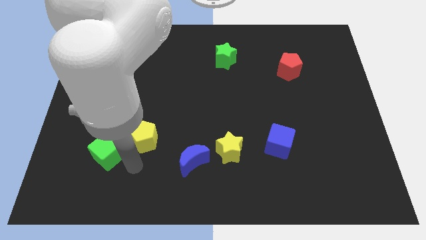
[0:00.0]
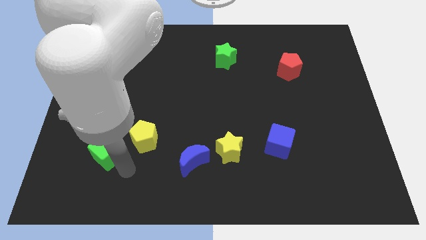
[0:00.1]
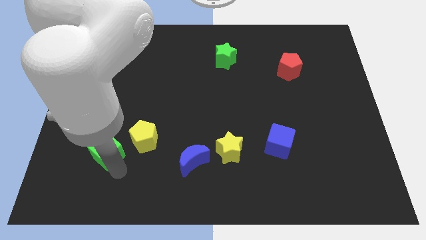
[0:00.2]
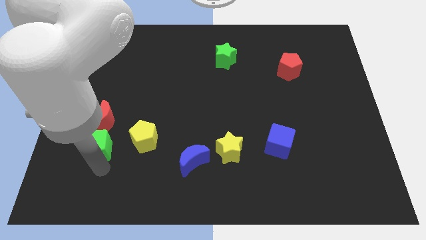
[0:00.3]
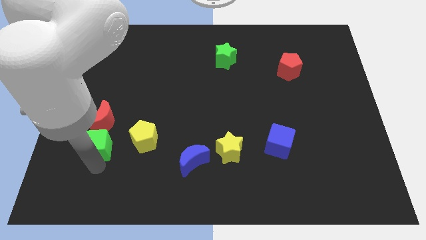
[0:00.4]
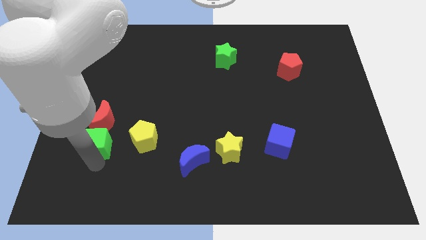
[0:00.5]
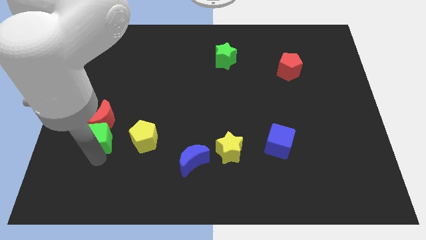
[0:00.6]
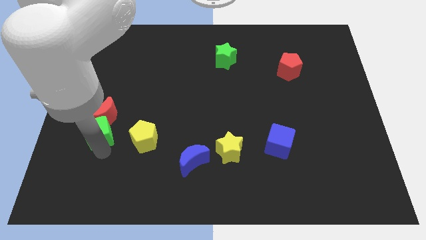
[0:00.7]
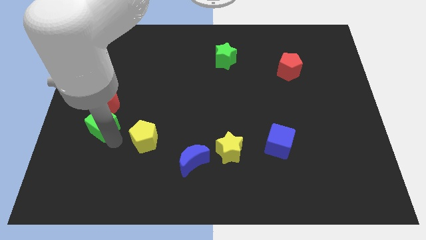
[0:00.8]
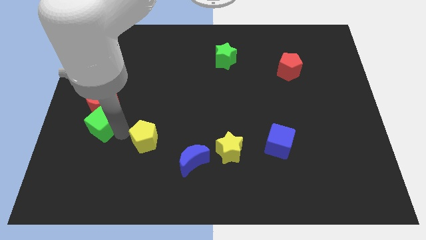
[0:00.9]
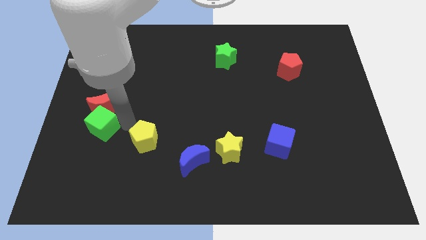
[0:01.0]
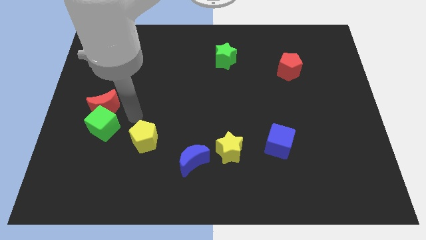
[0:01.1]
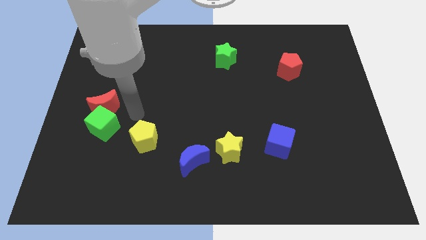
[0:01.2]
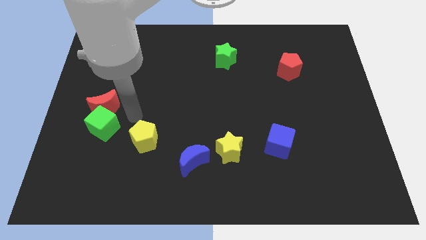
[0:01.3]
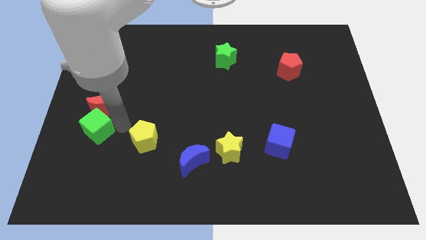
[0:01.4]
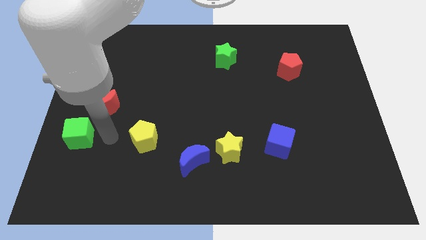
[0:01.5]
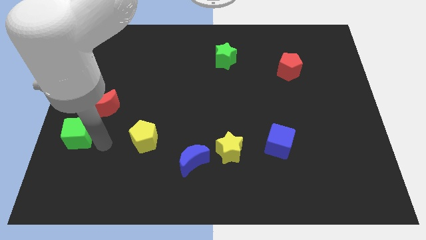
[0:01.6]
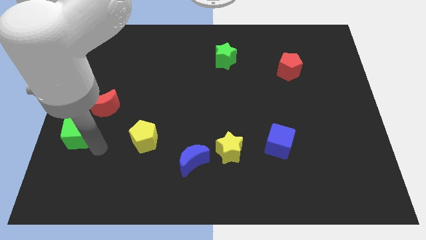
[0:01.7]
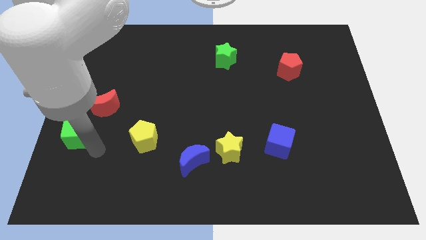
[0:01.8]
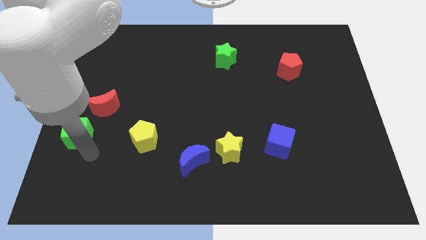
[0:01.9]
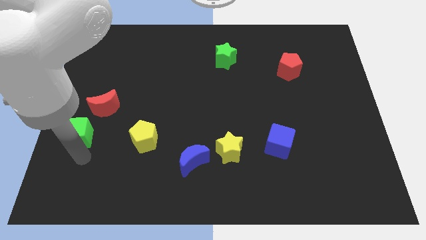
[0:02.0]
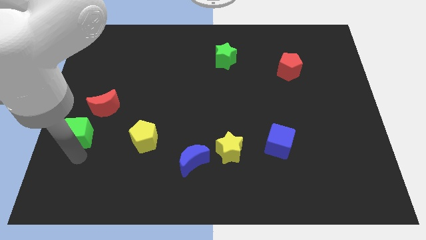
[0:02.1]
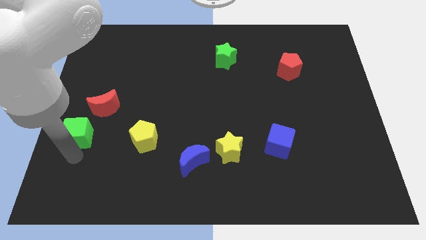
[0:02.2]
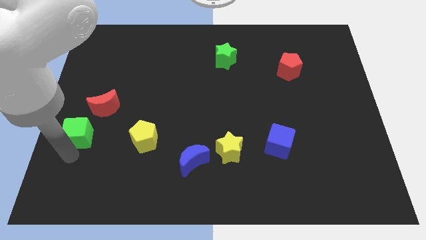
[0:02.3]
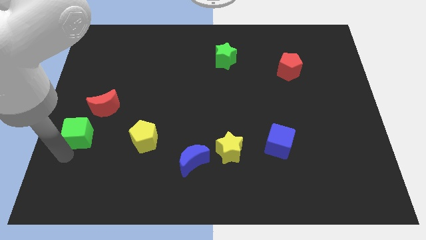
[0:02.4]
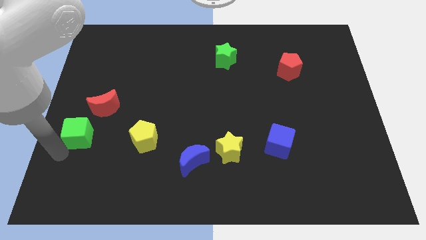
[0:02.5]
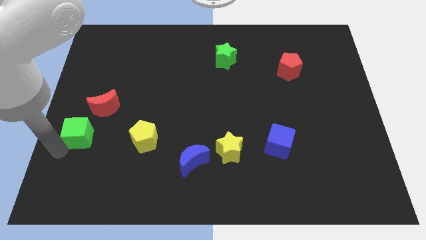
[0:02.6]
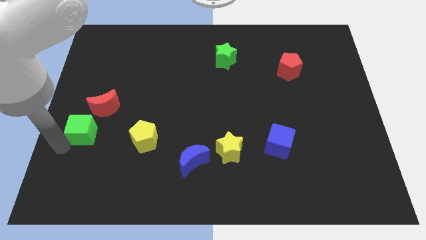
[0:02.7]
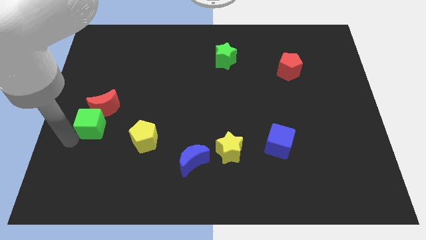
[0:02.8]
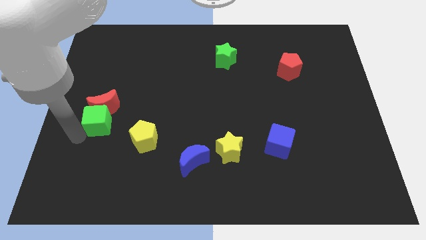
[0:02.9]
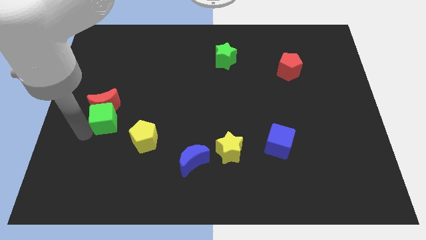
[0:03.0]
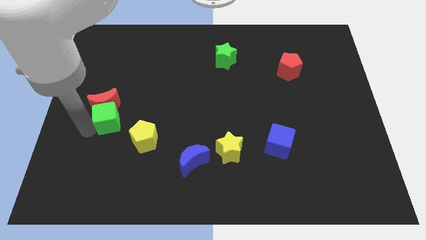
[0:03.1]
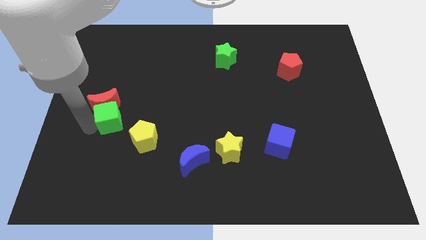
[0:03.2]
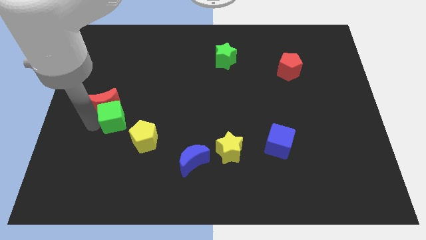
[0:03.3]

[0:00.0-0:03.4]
push the green cube into the red moon

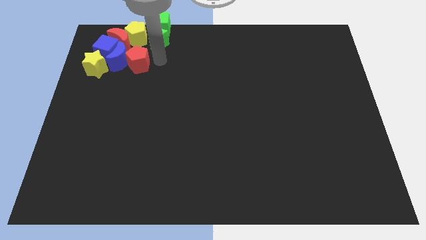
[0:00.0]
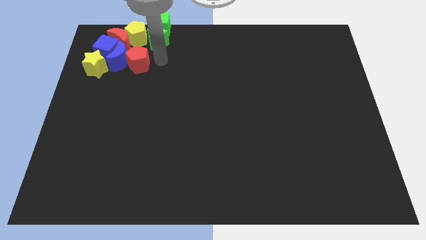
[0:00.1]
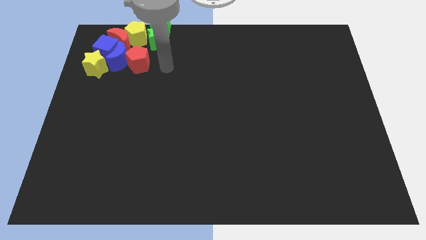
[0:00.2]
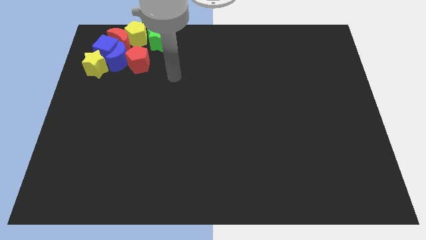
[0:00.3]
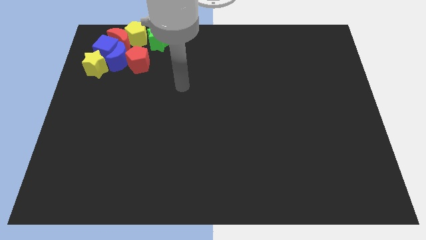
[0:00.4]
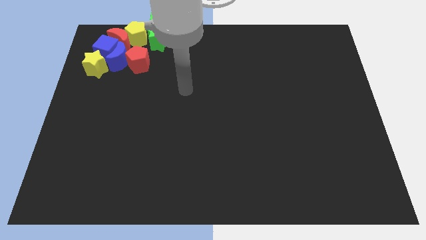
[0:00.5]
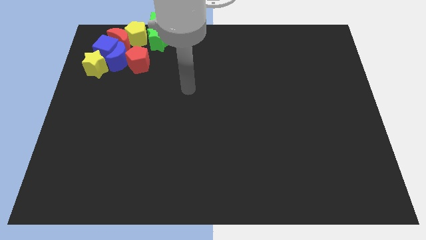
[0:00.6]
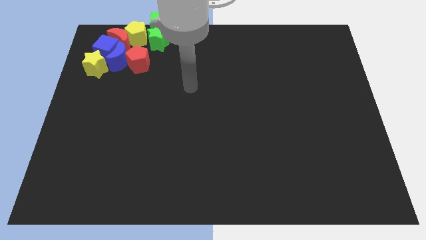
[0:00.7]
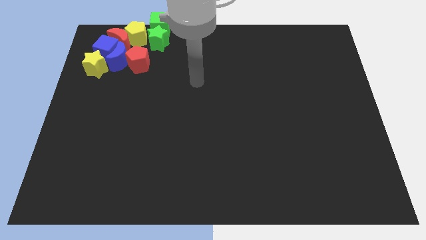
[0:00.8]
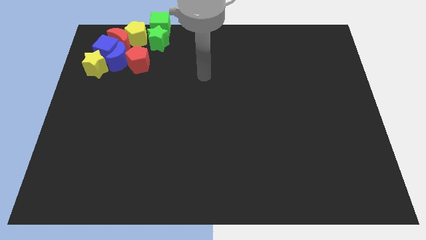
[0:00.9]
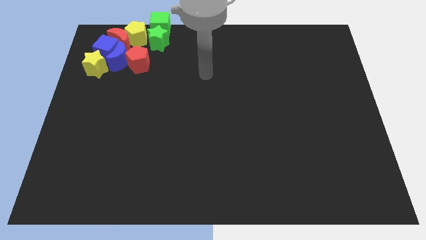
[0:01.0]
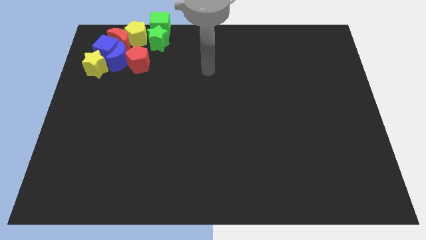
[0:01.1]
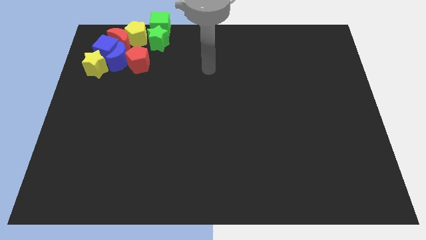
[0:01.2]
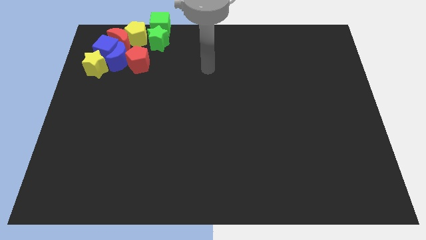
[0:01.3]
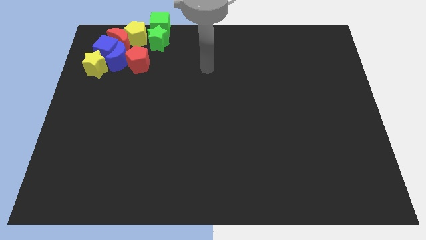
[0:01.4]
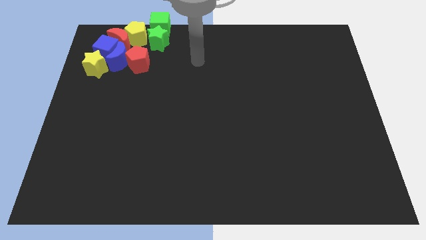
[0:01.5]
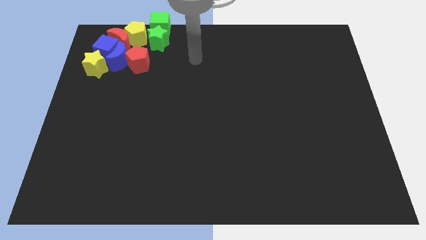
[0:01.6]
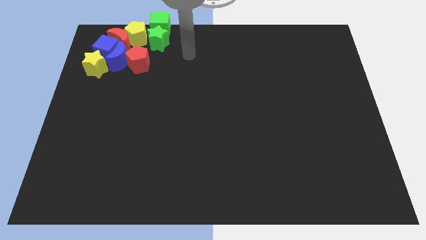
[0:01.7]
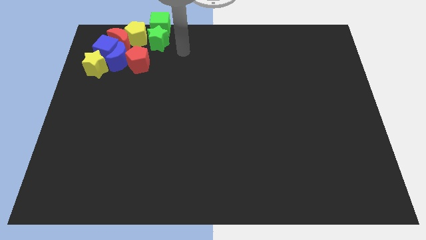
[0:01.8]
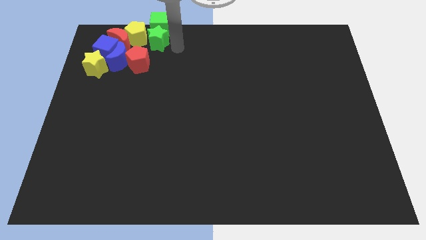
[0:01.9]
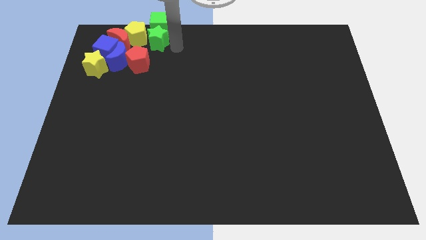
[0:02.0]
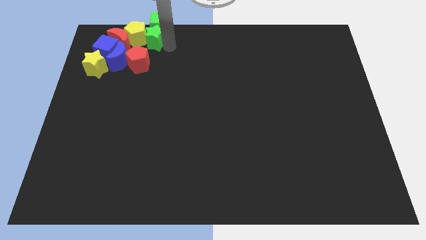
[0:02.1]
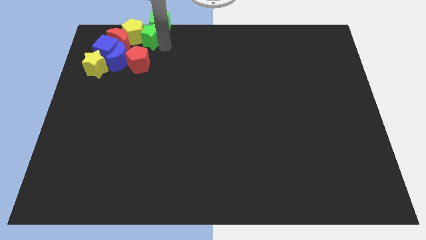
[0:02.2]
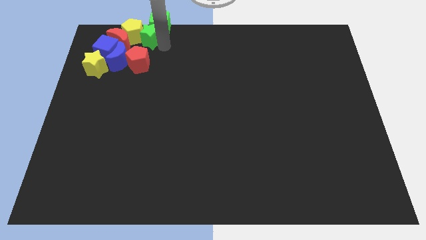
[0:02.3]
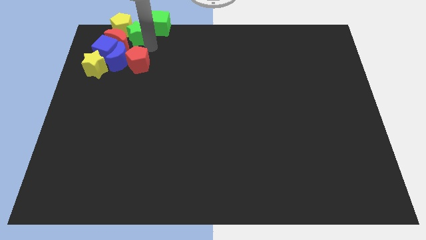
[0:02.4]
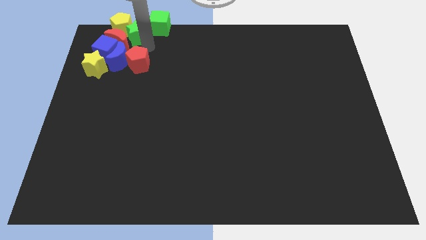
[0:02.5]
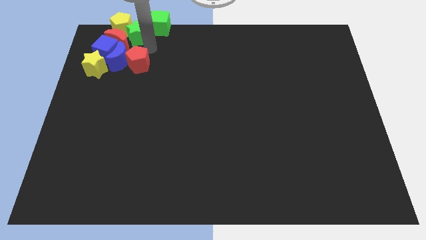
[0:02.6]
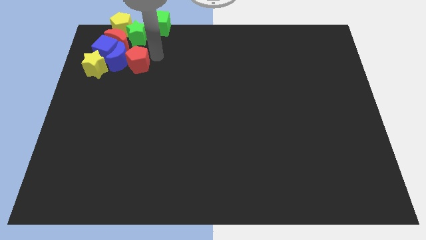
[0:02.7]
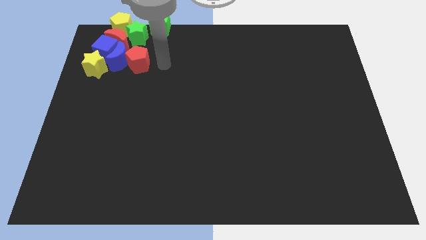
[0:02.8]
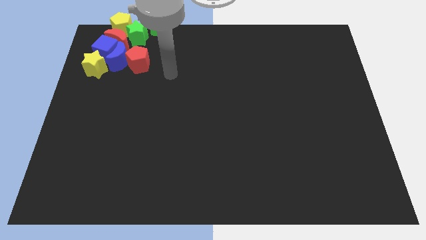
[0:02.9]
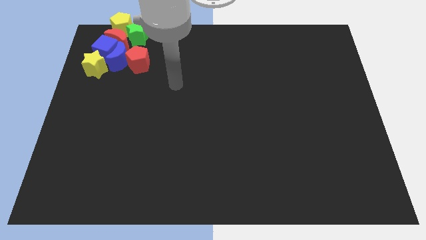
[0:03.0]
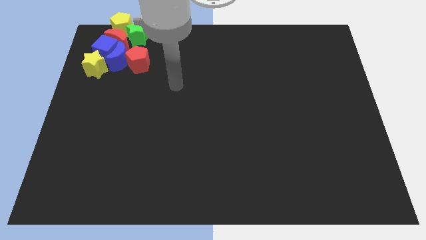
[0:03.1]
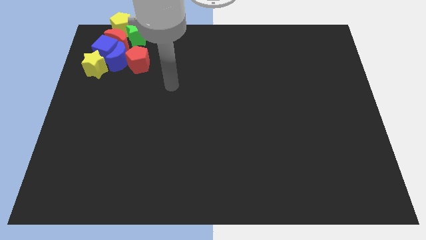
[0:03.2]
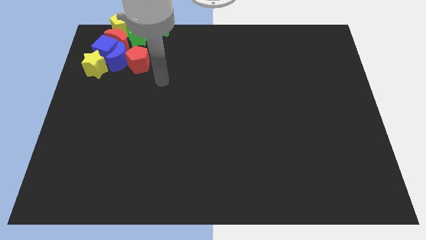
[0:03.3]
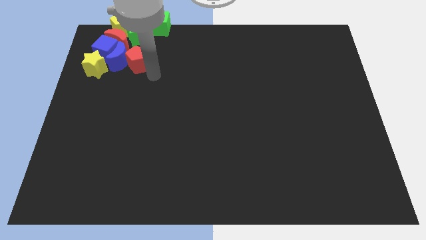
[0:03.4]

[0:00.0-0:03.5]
push the green star into the yellow pentagon

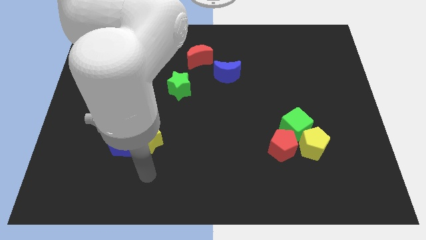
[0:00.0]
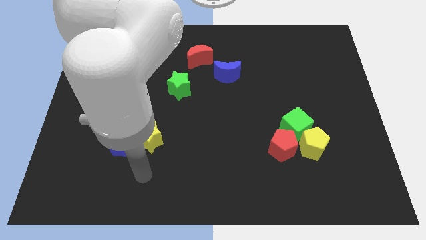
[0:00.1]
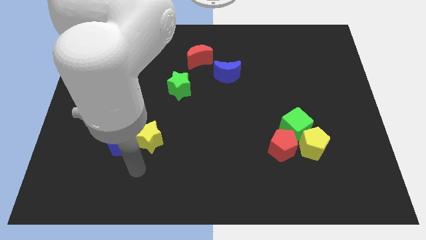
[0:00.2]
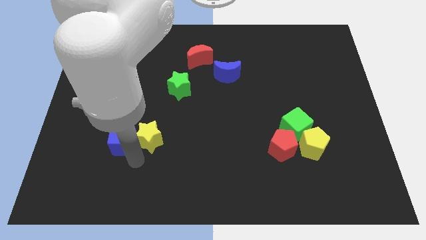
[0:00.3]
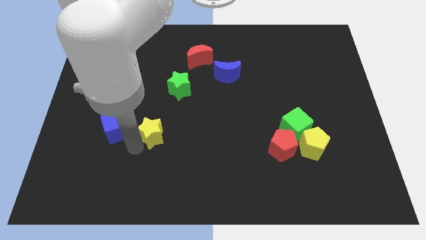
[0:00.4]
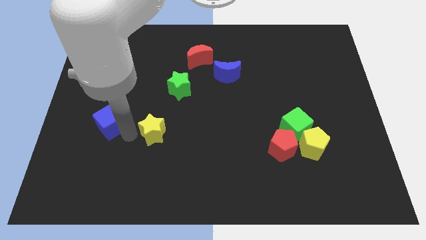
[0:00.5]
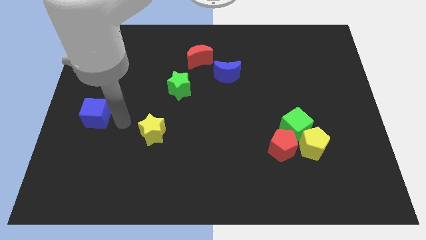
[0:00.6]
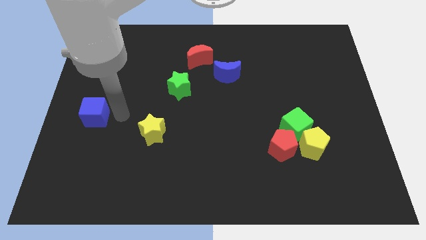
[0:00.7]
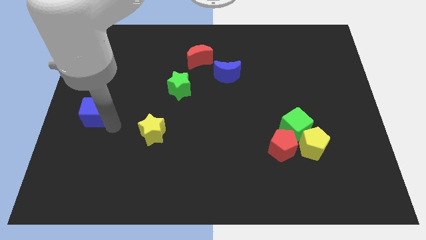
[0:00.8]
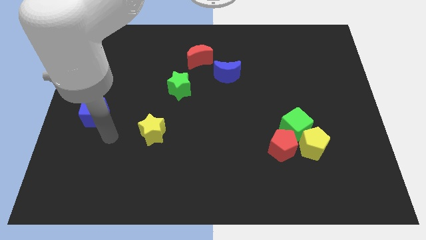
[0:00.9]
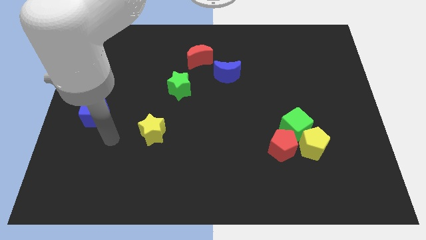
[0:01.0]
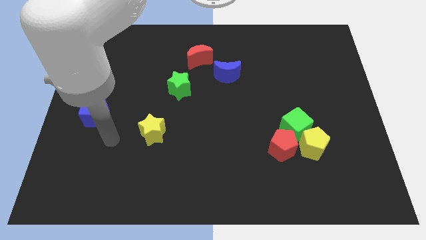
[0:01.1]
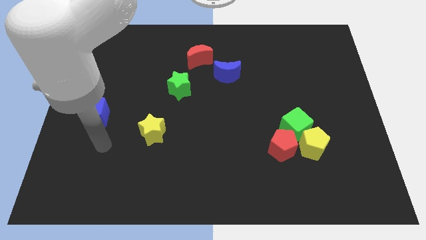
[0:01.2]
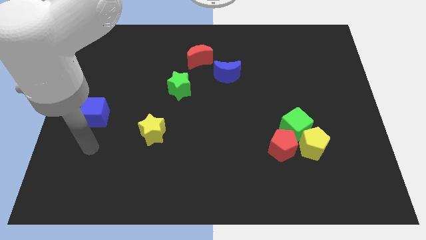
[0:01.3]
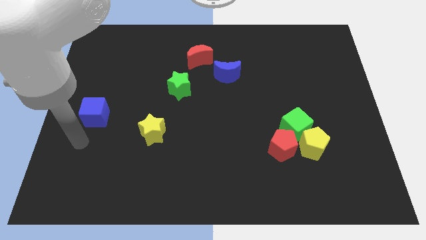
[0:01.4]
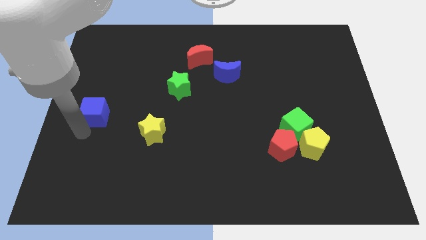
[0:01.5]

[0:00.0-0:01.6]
place the arm down to the blue cube

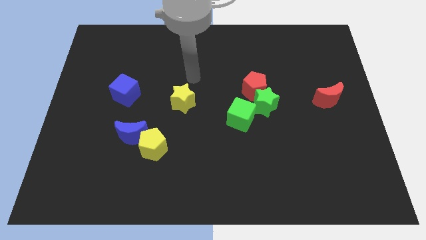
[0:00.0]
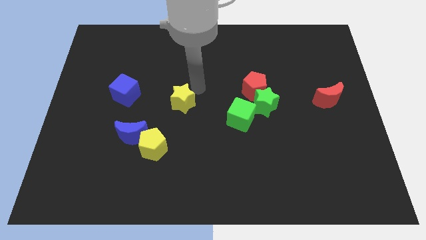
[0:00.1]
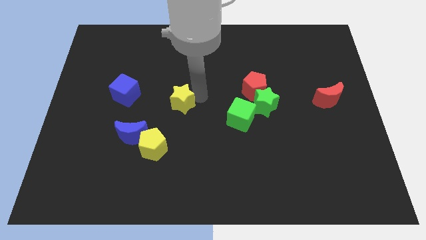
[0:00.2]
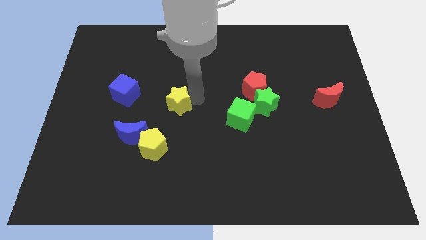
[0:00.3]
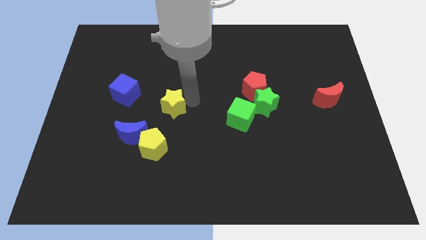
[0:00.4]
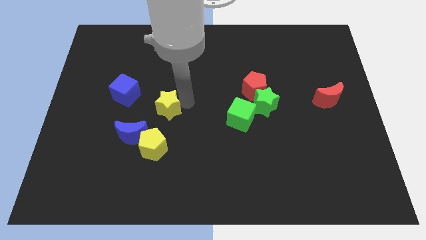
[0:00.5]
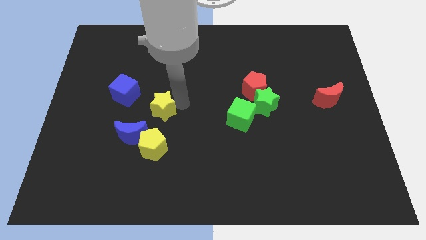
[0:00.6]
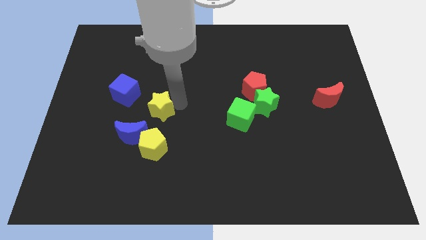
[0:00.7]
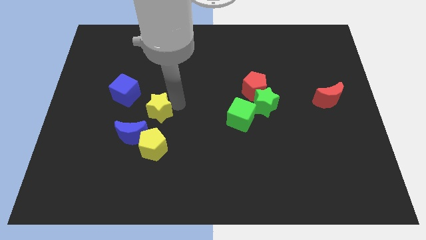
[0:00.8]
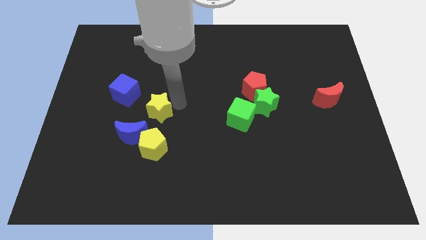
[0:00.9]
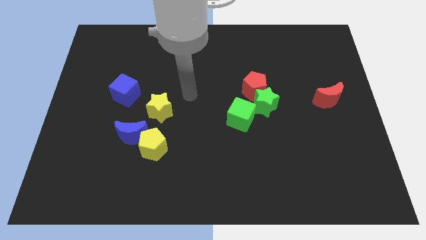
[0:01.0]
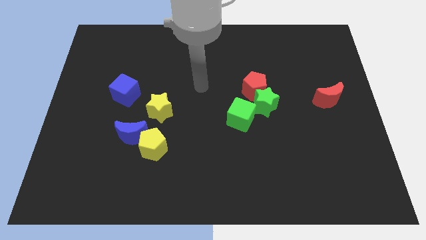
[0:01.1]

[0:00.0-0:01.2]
place the yellow star above the yellow pentgaon
